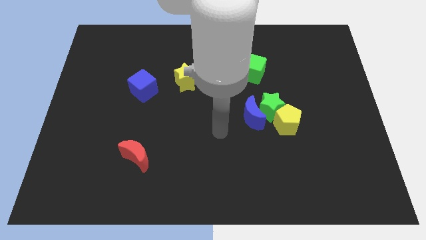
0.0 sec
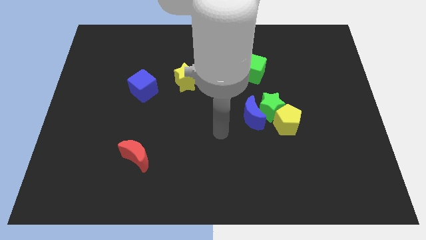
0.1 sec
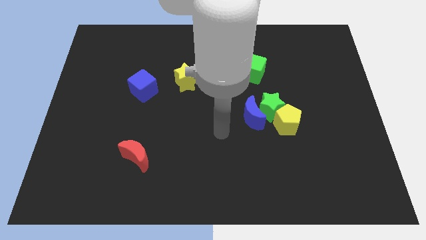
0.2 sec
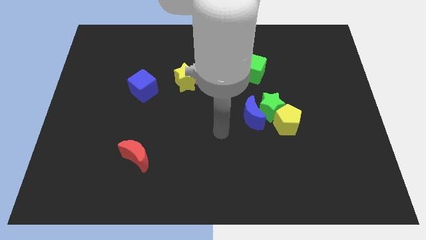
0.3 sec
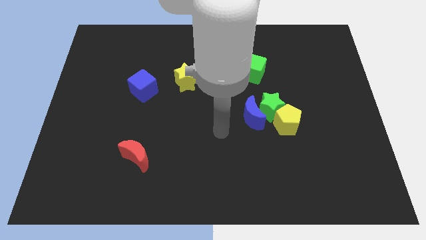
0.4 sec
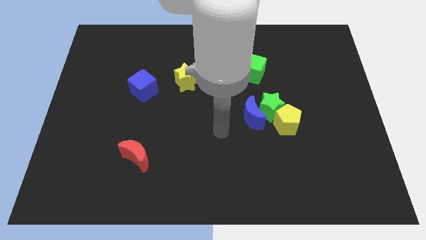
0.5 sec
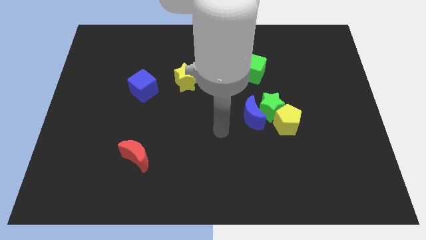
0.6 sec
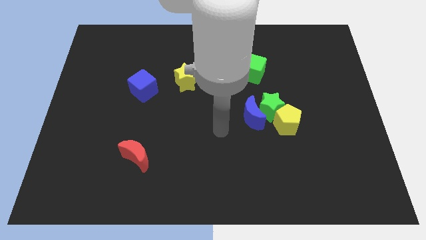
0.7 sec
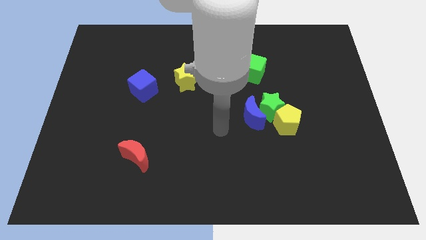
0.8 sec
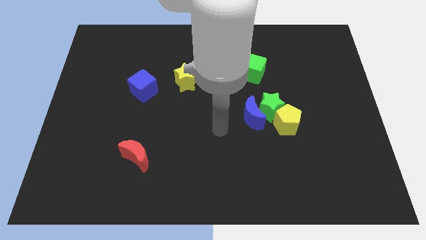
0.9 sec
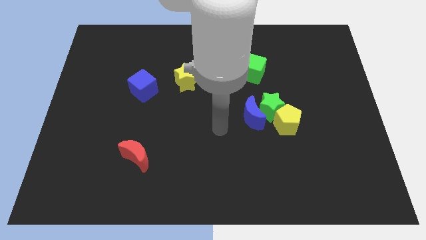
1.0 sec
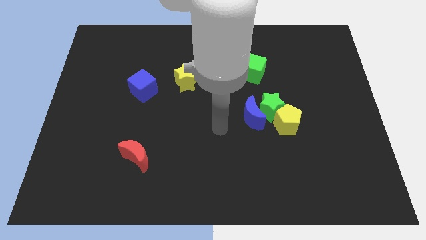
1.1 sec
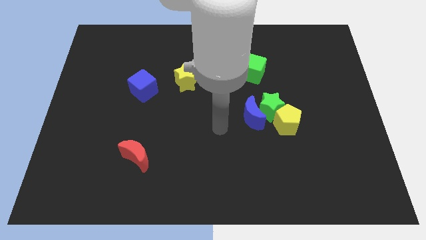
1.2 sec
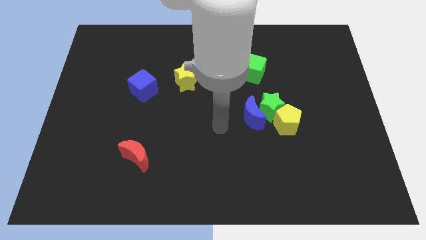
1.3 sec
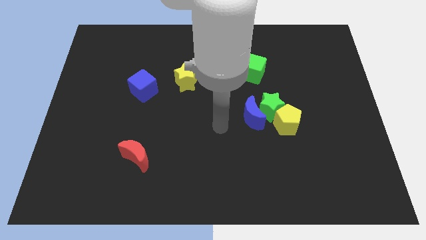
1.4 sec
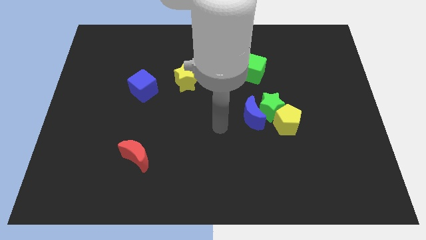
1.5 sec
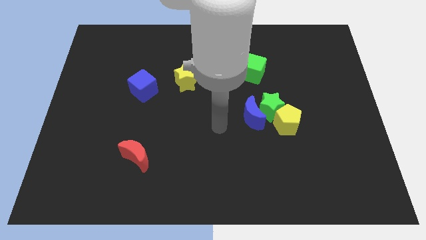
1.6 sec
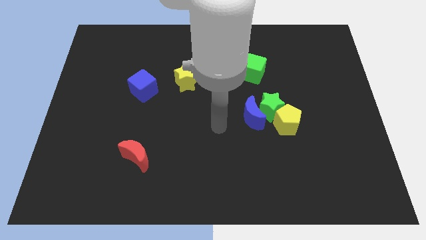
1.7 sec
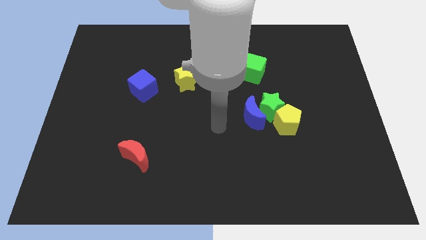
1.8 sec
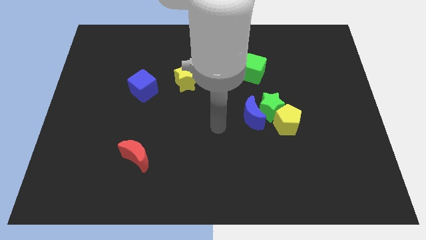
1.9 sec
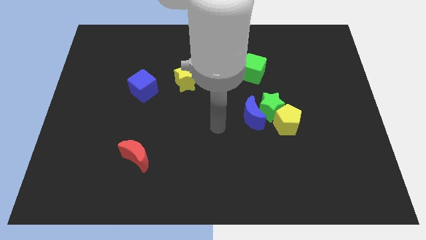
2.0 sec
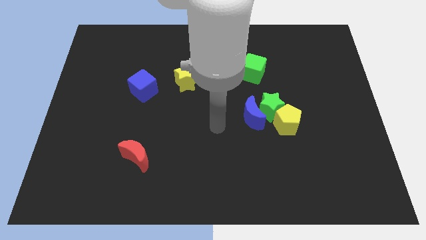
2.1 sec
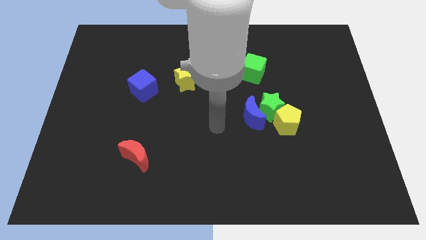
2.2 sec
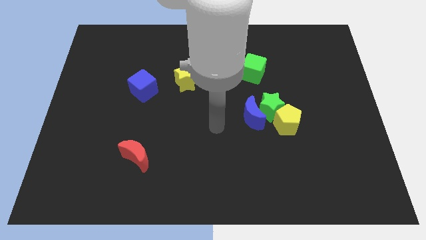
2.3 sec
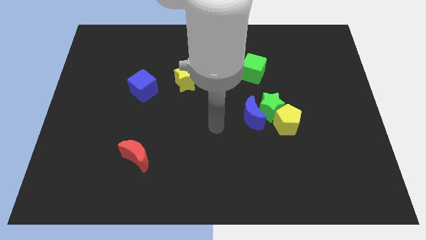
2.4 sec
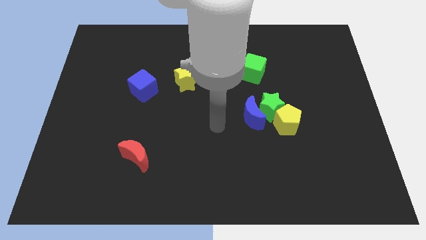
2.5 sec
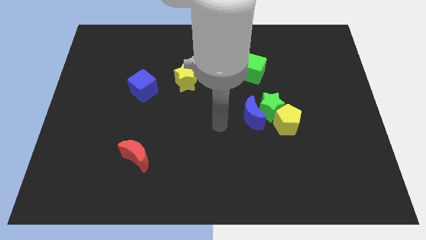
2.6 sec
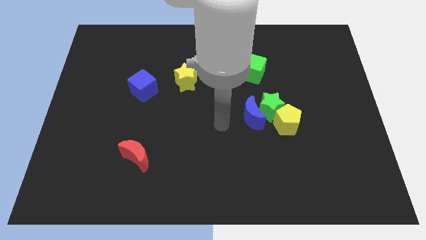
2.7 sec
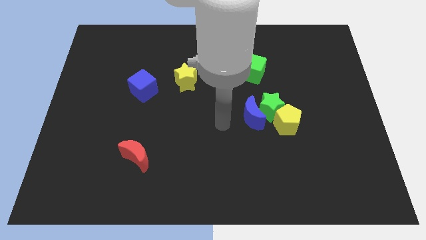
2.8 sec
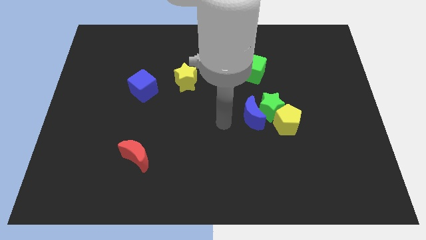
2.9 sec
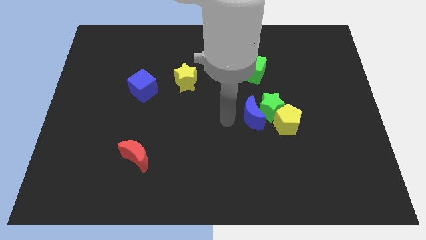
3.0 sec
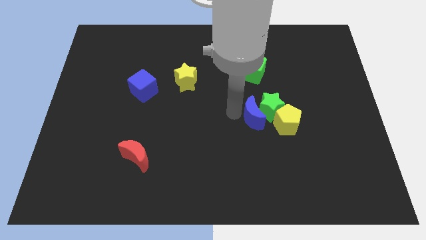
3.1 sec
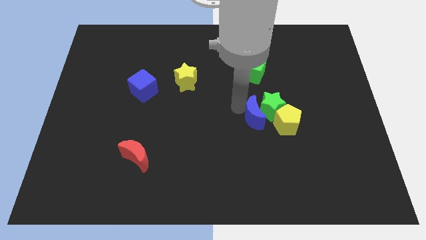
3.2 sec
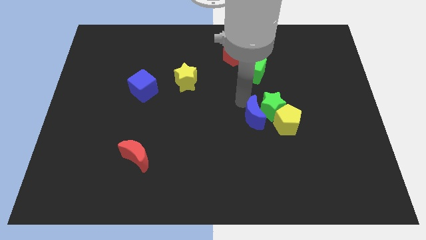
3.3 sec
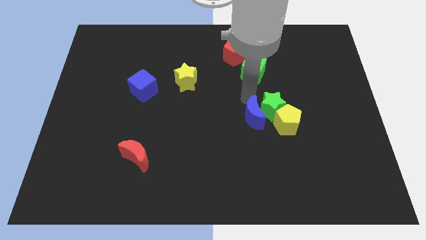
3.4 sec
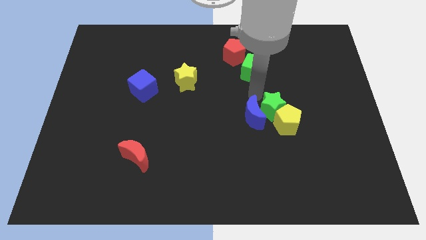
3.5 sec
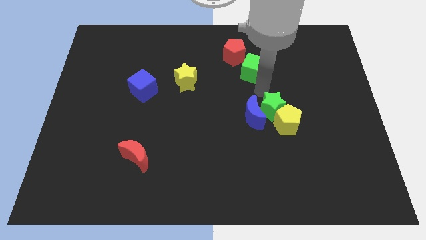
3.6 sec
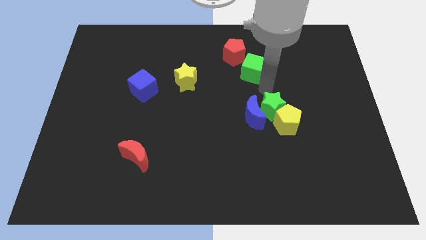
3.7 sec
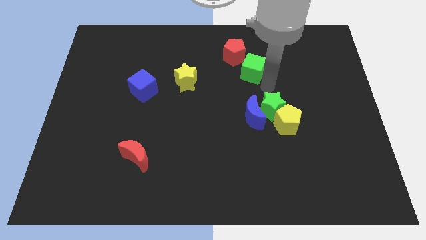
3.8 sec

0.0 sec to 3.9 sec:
move the arm above to the green star

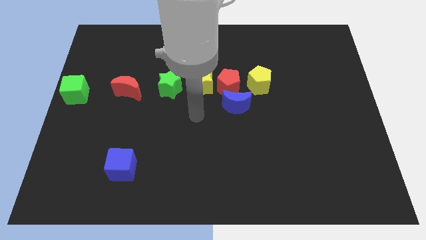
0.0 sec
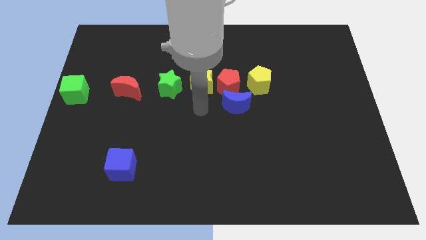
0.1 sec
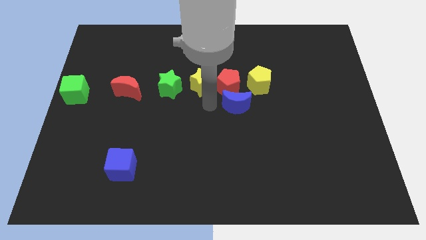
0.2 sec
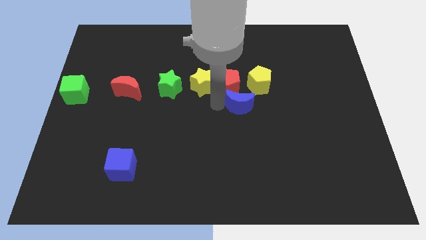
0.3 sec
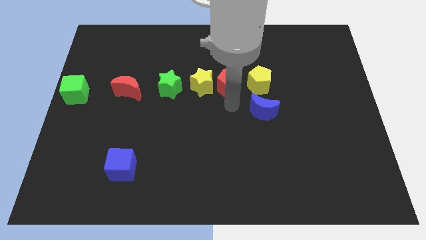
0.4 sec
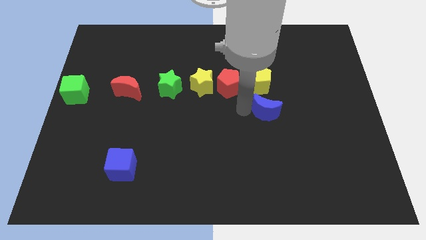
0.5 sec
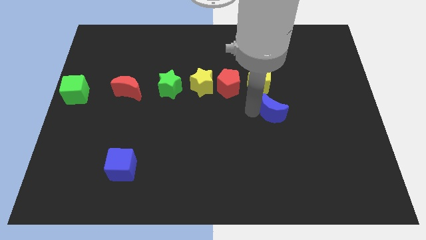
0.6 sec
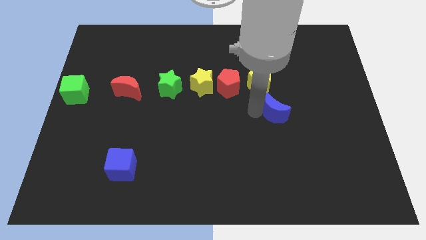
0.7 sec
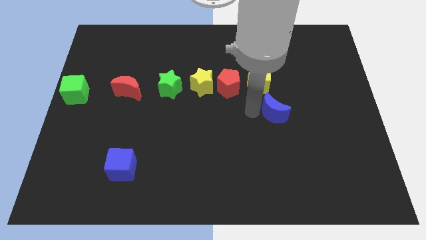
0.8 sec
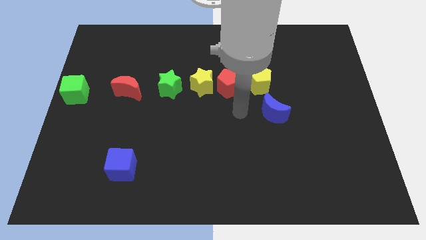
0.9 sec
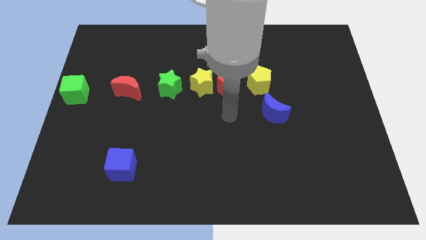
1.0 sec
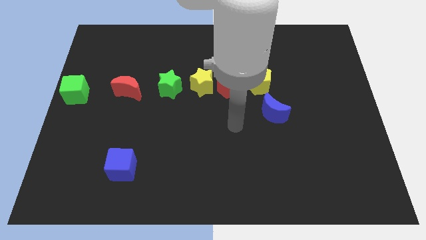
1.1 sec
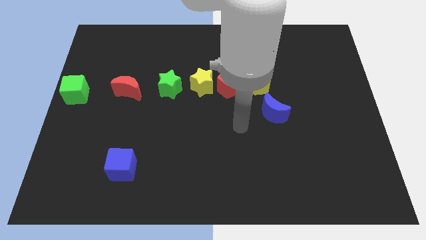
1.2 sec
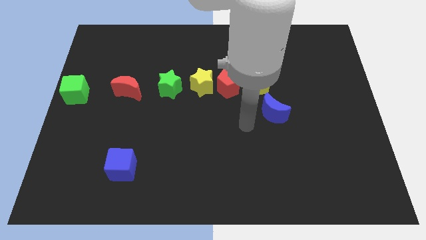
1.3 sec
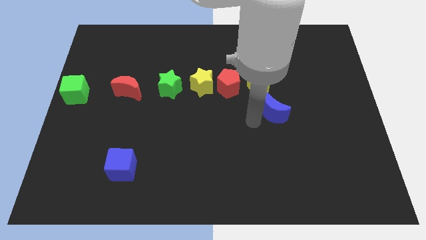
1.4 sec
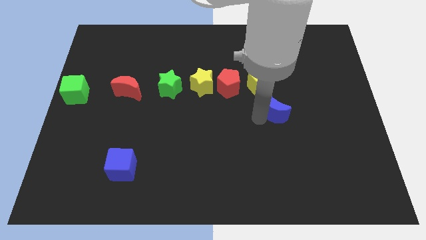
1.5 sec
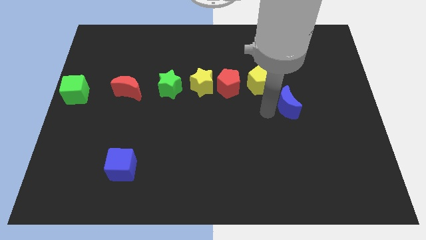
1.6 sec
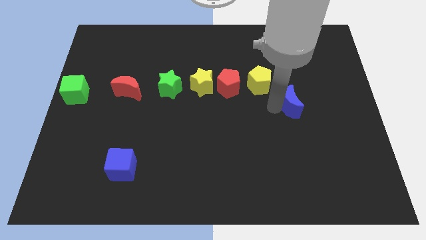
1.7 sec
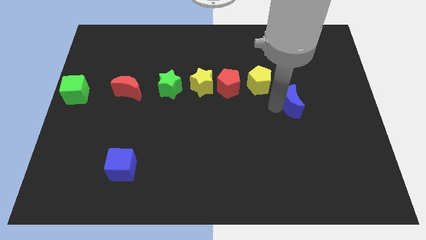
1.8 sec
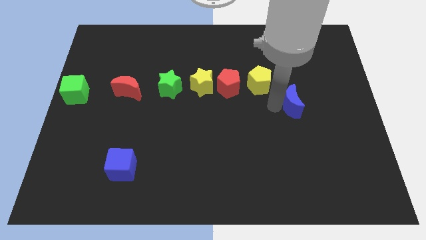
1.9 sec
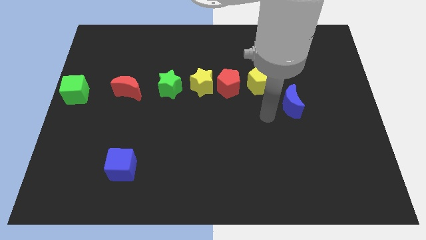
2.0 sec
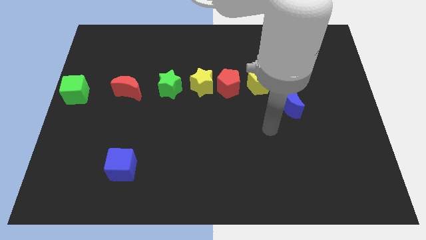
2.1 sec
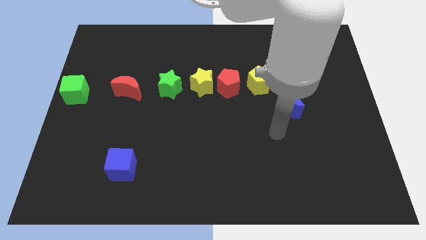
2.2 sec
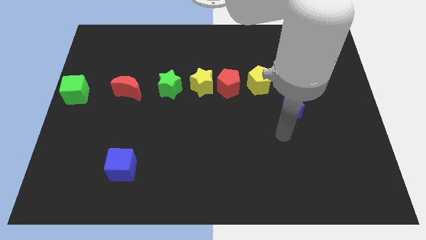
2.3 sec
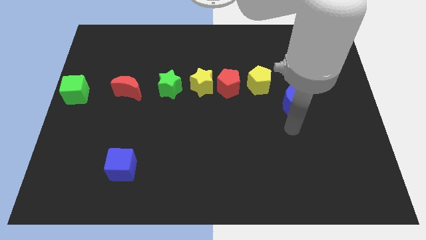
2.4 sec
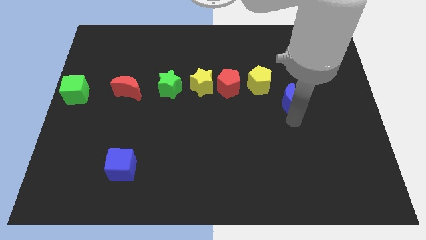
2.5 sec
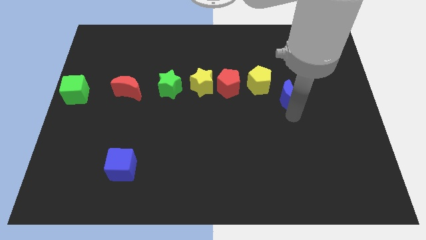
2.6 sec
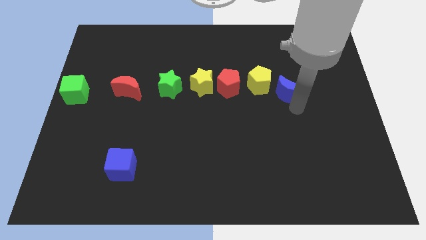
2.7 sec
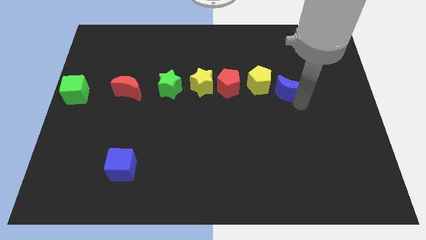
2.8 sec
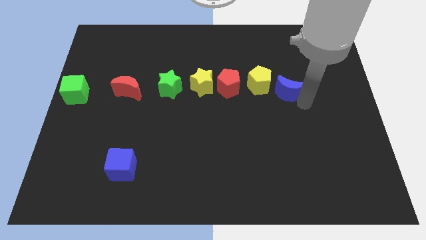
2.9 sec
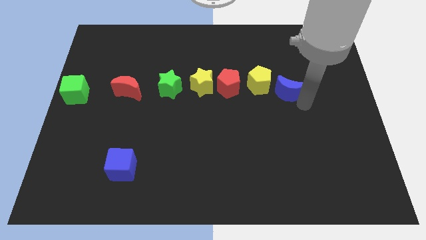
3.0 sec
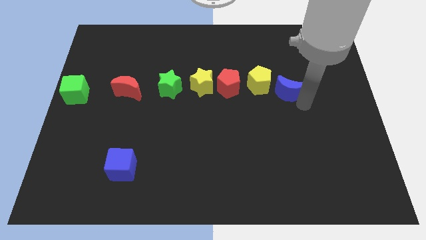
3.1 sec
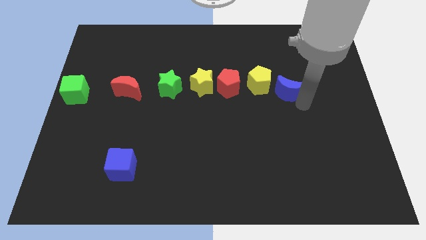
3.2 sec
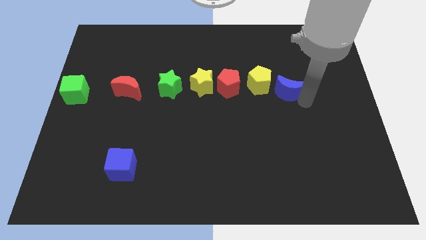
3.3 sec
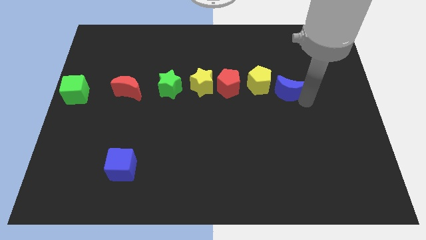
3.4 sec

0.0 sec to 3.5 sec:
push the blue crescent to the right of the yellow pentagon

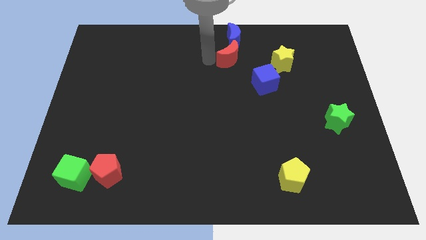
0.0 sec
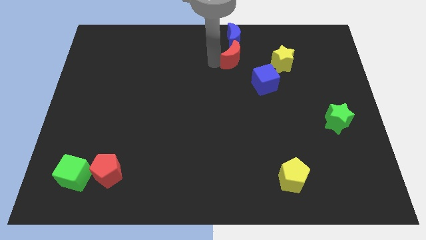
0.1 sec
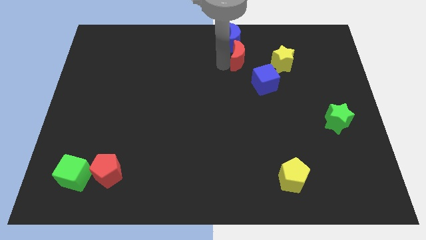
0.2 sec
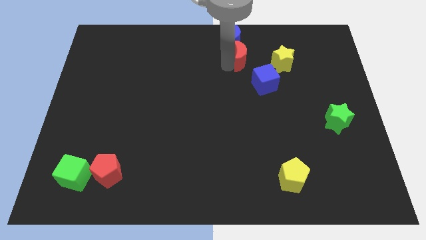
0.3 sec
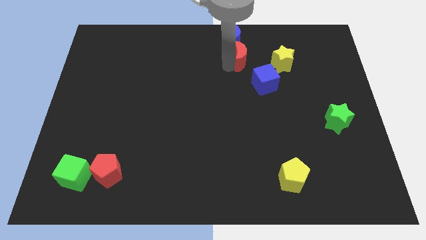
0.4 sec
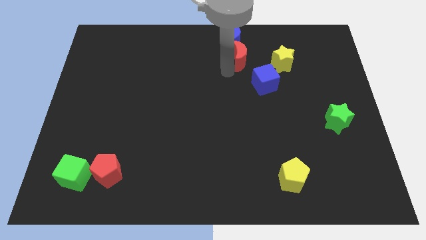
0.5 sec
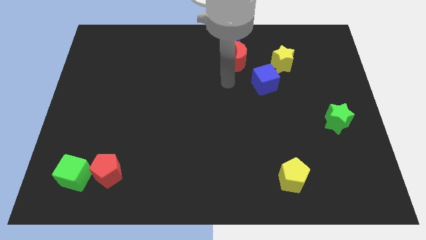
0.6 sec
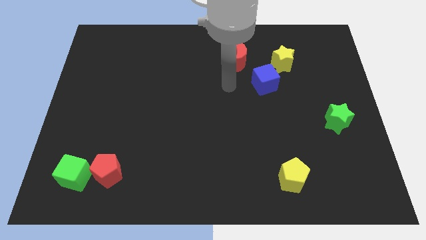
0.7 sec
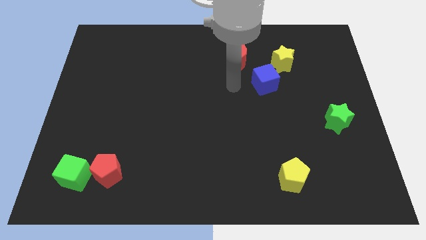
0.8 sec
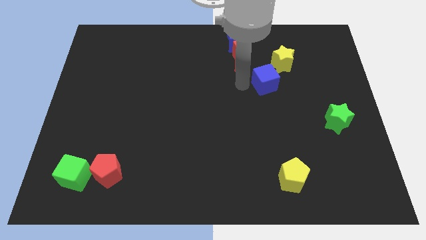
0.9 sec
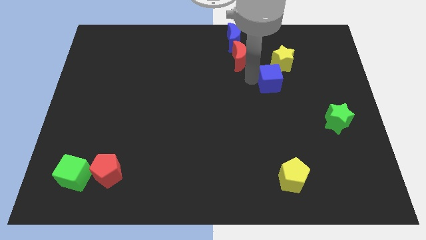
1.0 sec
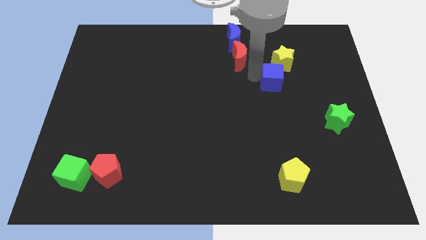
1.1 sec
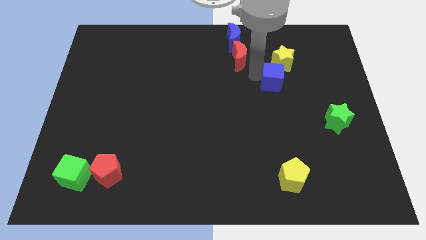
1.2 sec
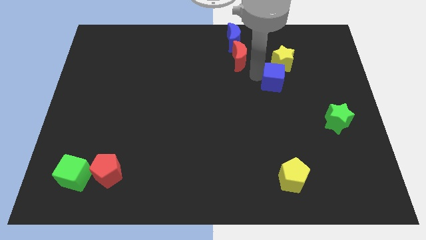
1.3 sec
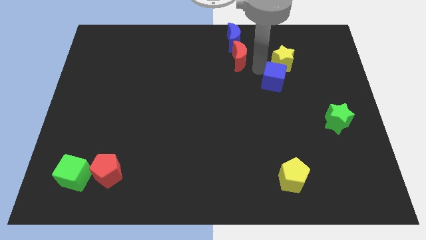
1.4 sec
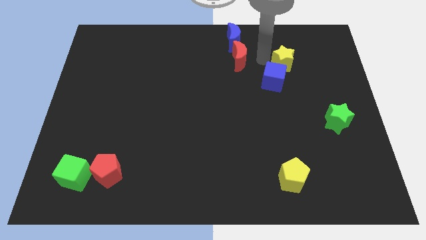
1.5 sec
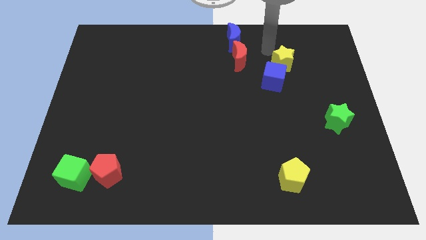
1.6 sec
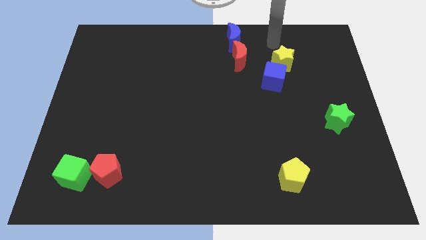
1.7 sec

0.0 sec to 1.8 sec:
slightly move the blue cube towards the right
